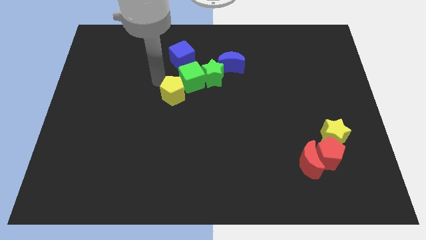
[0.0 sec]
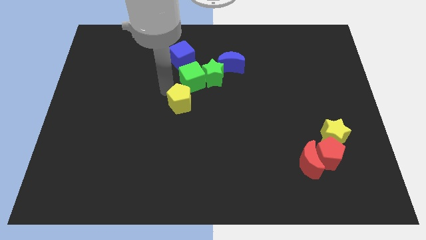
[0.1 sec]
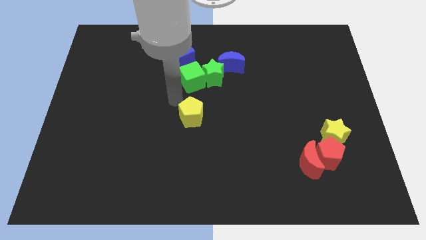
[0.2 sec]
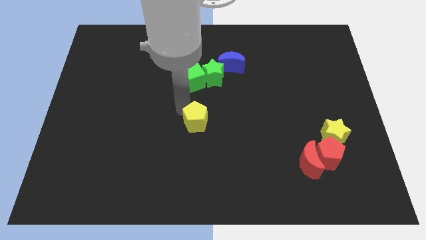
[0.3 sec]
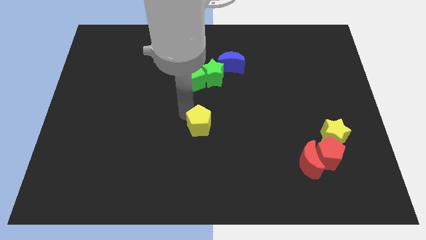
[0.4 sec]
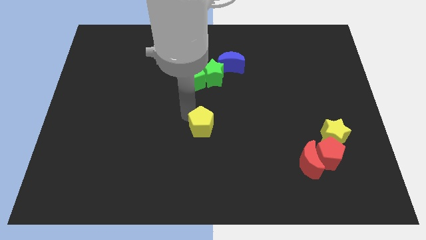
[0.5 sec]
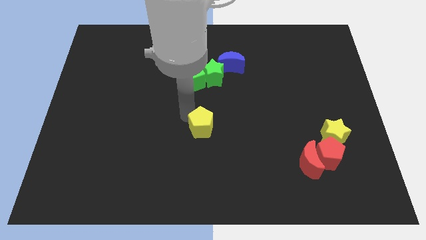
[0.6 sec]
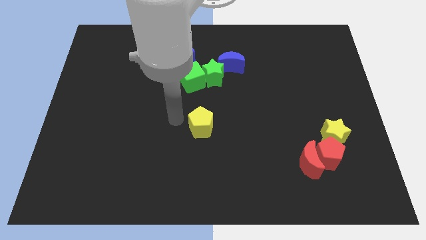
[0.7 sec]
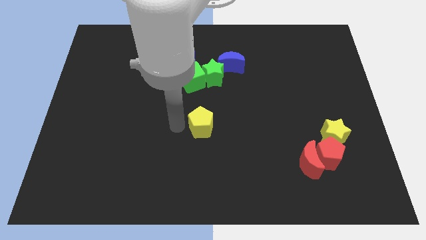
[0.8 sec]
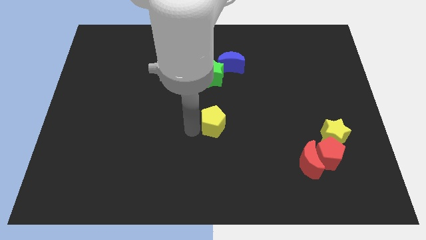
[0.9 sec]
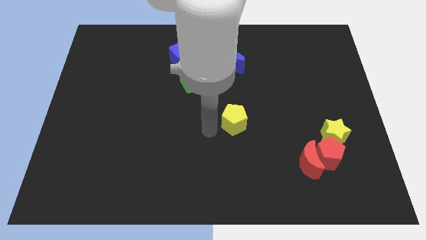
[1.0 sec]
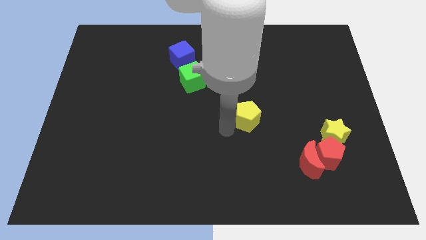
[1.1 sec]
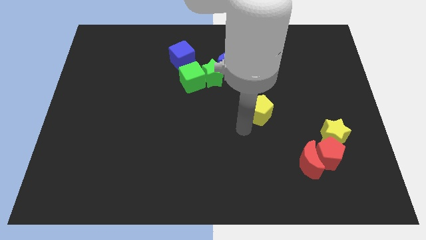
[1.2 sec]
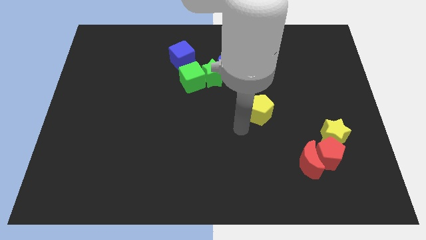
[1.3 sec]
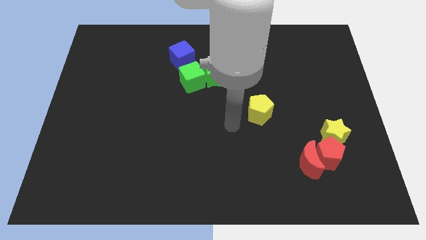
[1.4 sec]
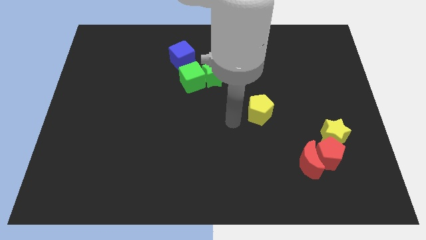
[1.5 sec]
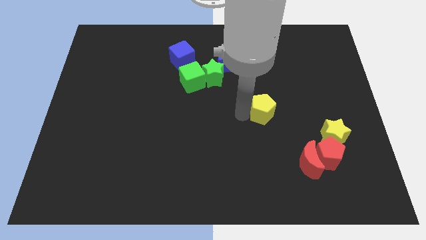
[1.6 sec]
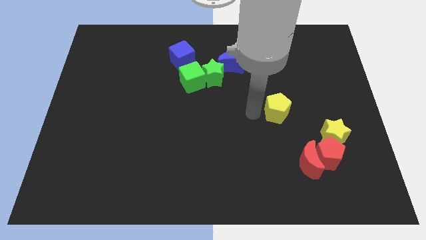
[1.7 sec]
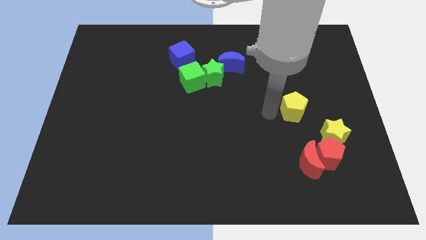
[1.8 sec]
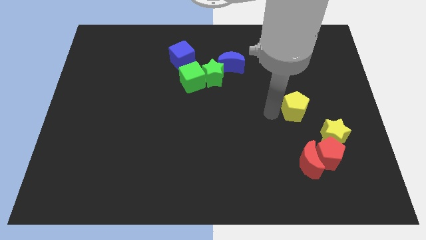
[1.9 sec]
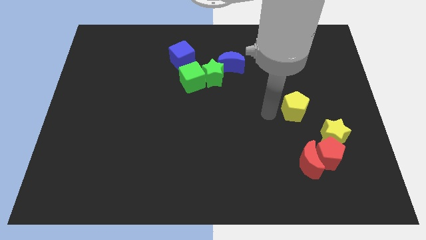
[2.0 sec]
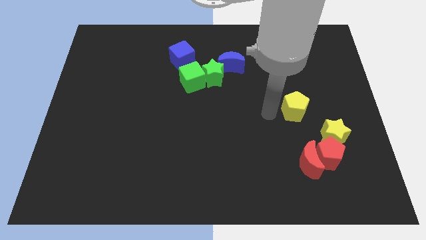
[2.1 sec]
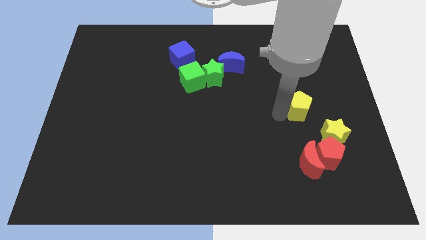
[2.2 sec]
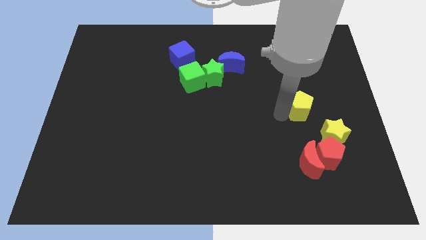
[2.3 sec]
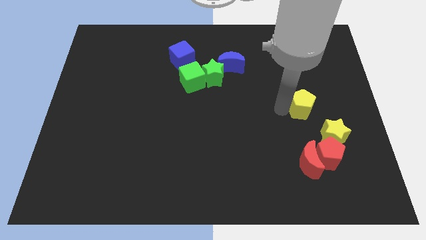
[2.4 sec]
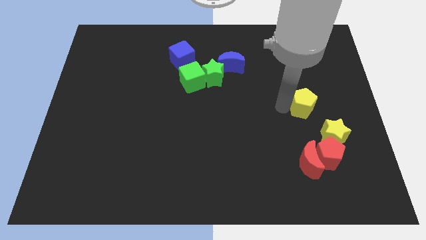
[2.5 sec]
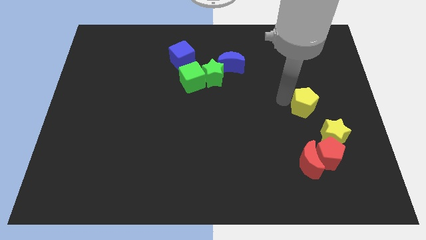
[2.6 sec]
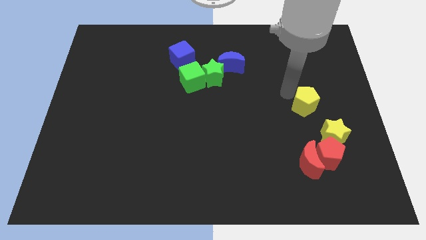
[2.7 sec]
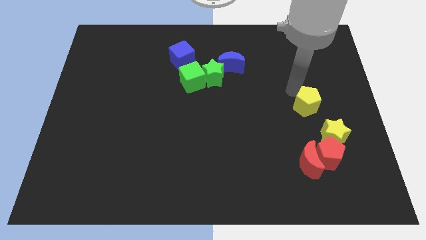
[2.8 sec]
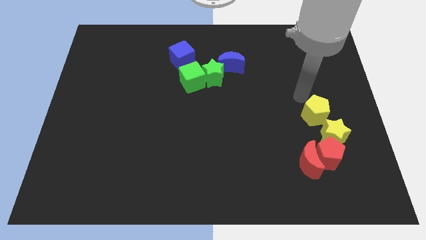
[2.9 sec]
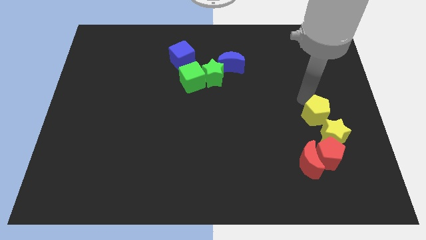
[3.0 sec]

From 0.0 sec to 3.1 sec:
place the yellow pentagon above the red pentagon

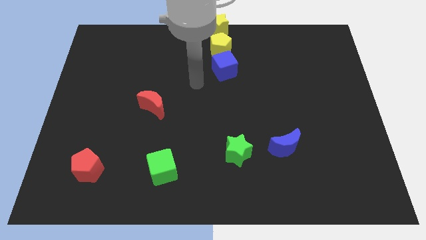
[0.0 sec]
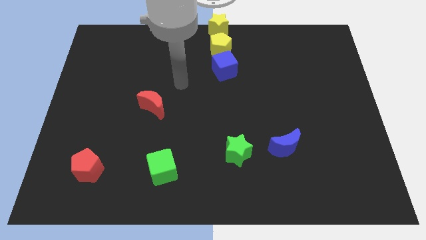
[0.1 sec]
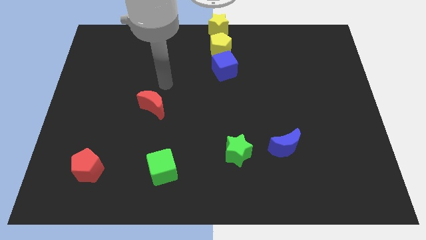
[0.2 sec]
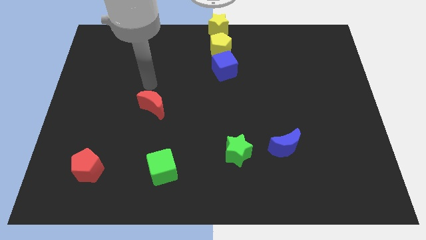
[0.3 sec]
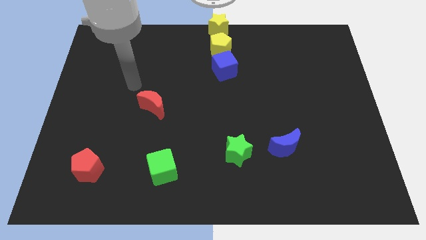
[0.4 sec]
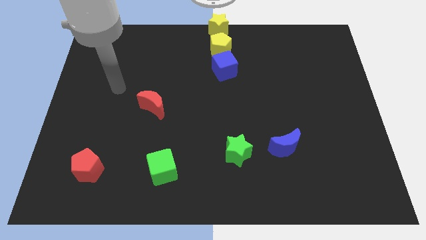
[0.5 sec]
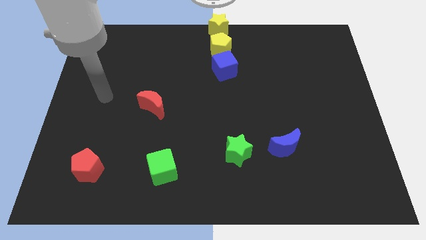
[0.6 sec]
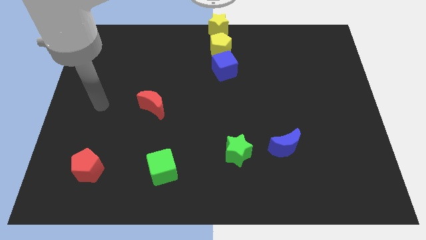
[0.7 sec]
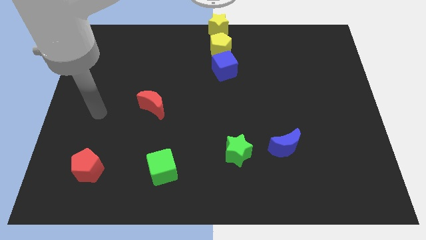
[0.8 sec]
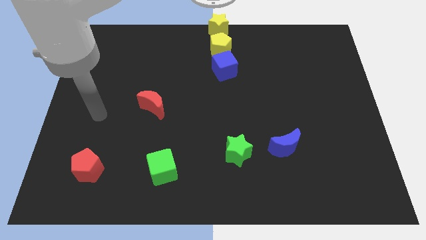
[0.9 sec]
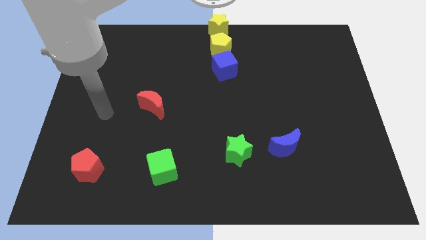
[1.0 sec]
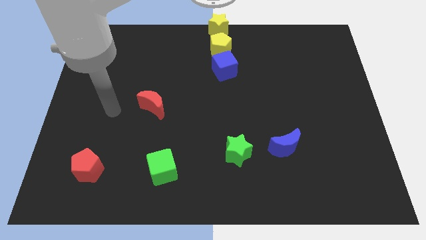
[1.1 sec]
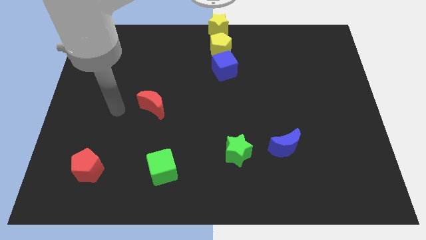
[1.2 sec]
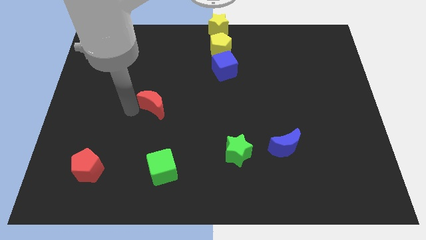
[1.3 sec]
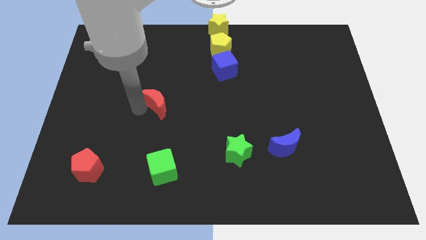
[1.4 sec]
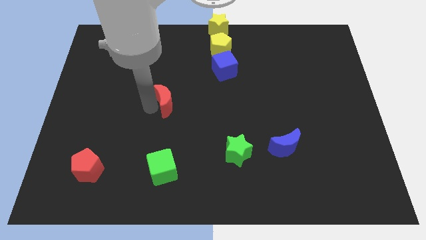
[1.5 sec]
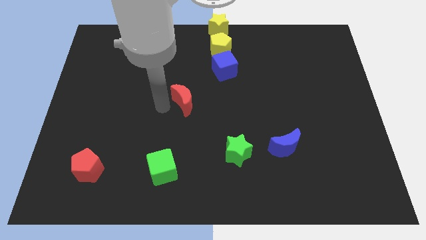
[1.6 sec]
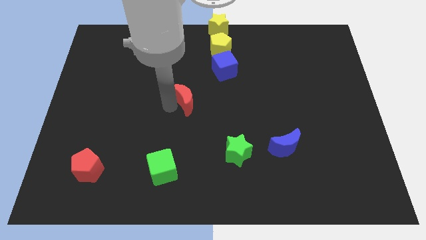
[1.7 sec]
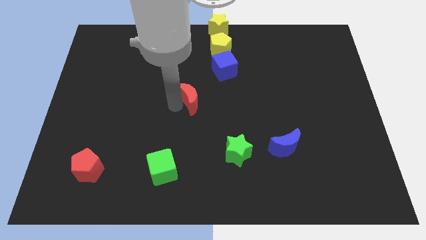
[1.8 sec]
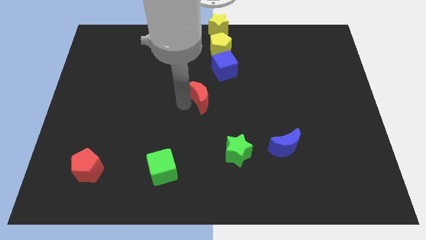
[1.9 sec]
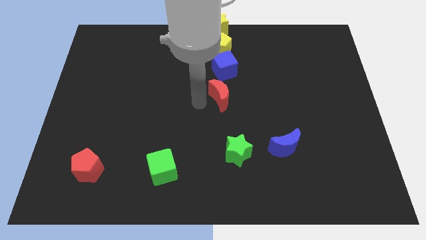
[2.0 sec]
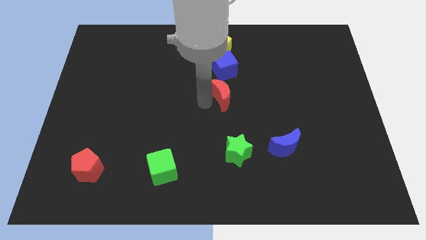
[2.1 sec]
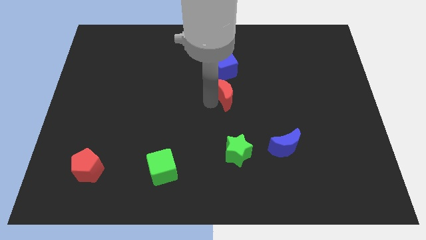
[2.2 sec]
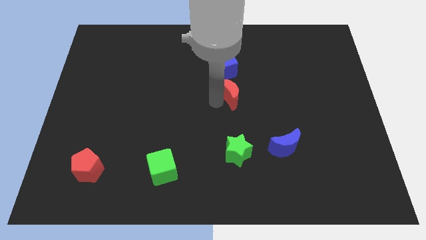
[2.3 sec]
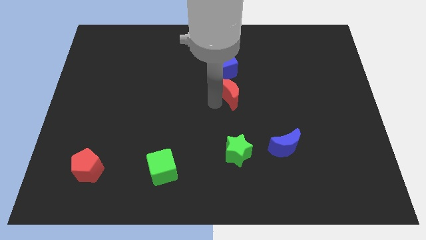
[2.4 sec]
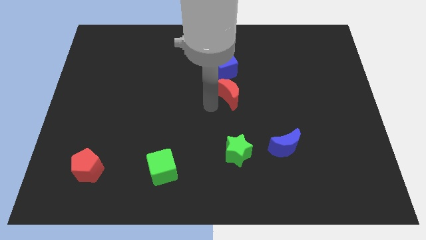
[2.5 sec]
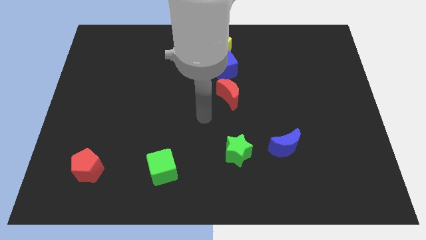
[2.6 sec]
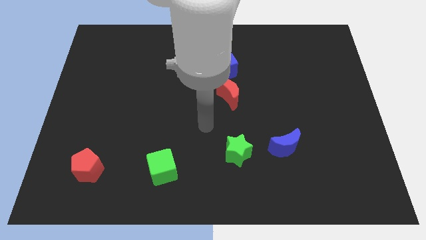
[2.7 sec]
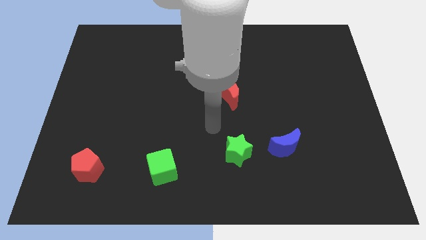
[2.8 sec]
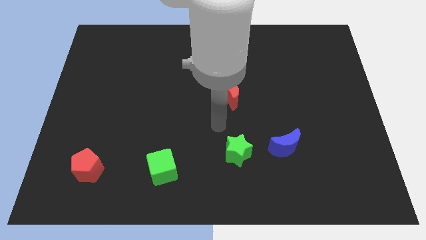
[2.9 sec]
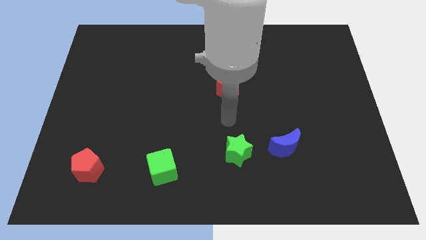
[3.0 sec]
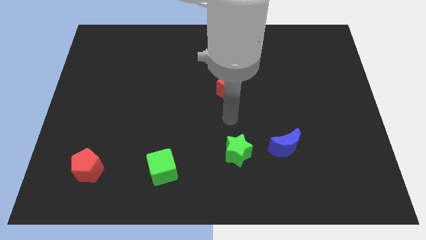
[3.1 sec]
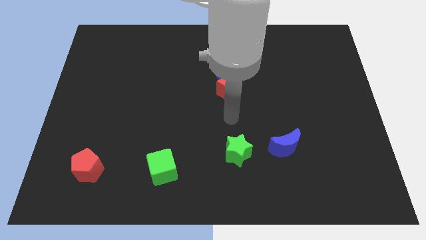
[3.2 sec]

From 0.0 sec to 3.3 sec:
place the red crescent vertically above the green star

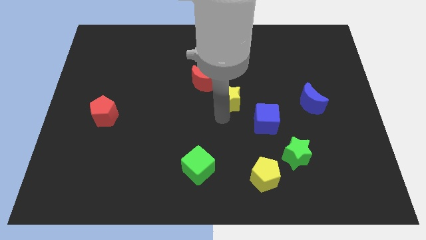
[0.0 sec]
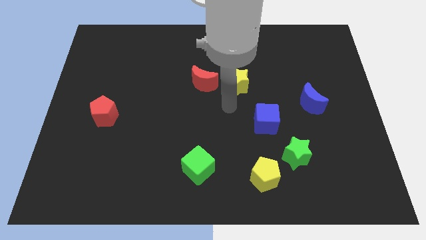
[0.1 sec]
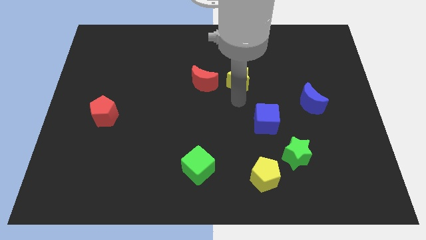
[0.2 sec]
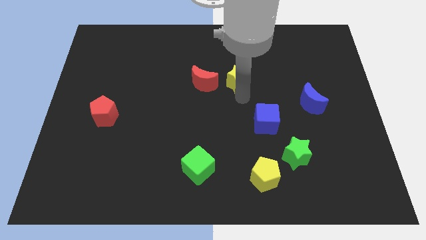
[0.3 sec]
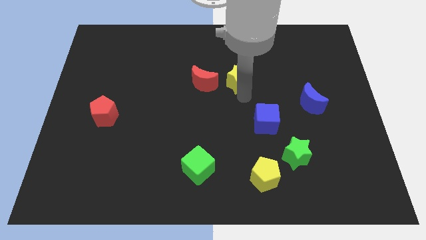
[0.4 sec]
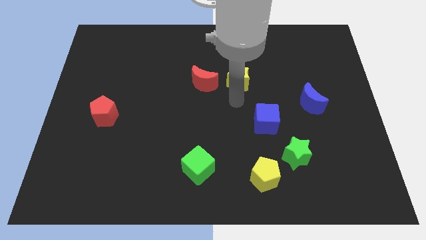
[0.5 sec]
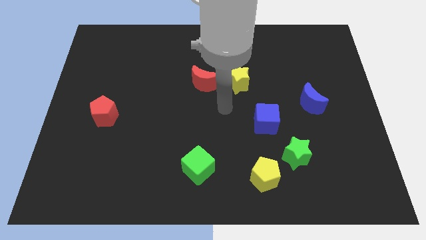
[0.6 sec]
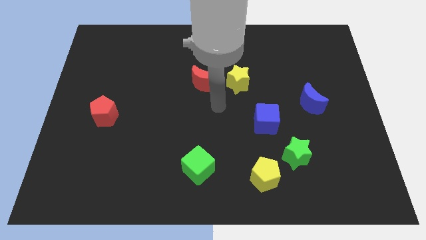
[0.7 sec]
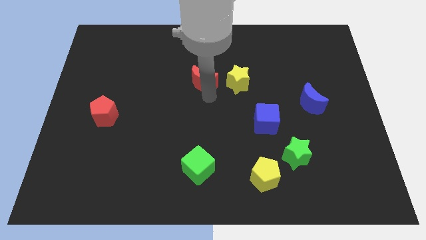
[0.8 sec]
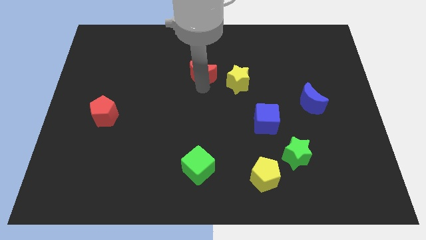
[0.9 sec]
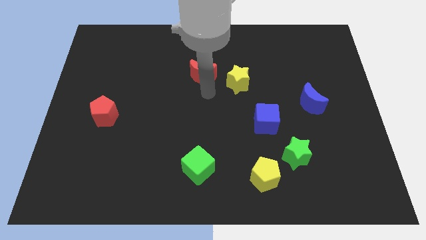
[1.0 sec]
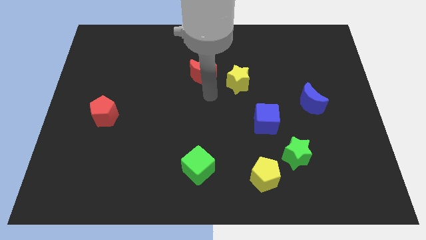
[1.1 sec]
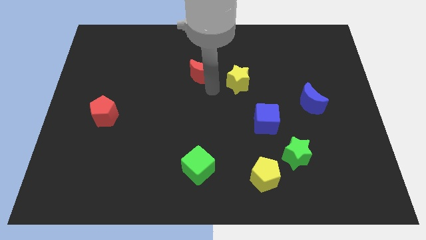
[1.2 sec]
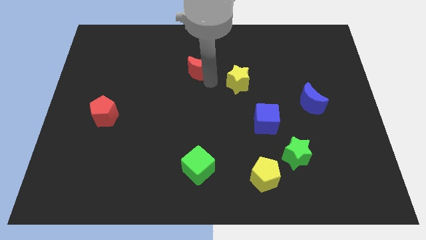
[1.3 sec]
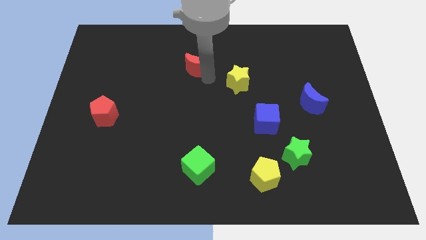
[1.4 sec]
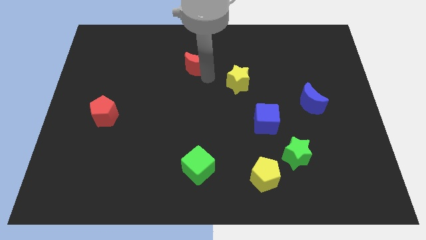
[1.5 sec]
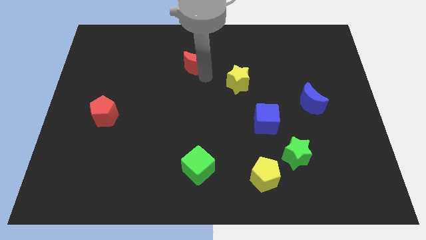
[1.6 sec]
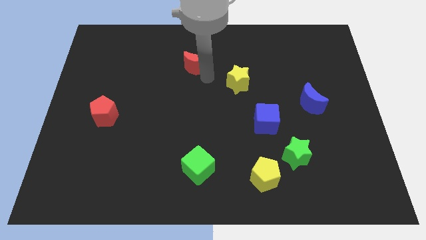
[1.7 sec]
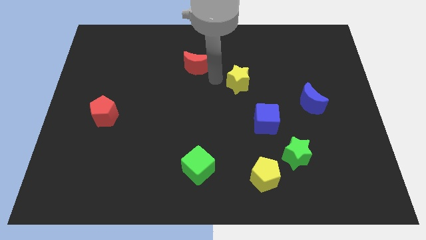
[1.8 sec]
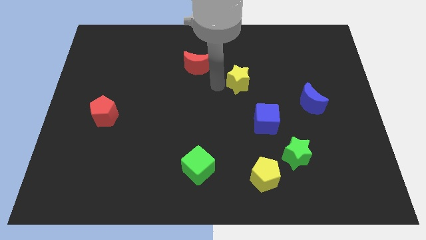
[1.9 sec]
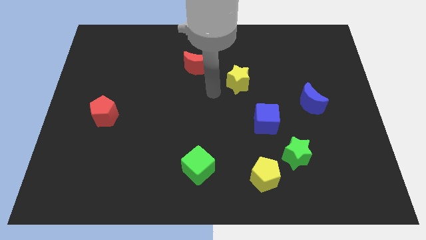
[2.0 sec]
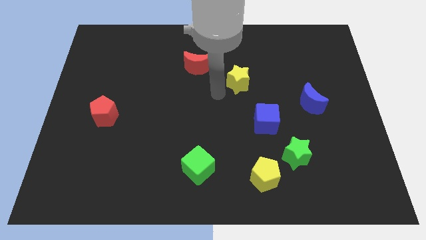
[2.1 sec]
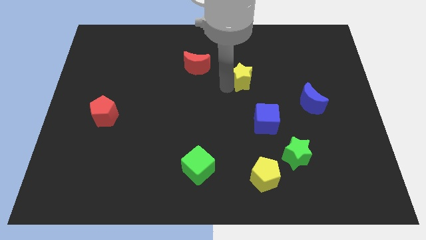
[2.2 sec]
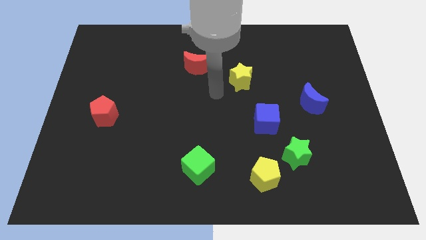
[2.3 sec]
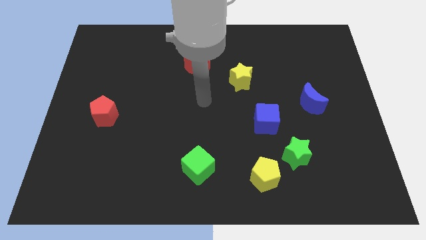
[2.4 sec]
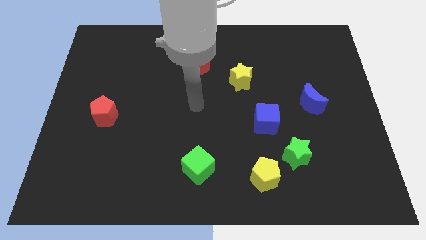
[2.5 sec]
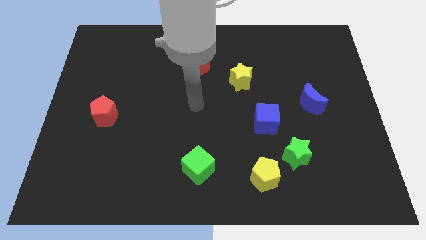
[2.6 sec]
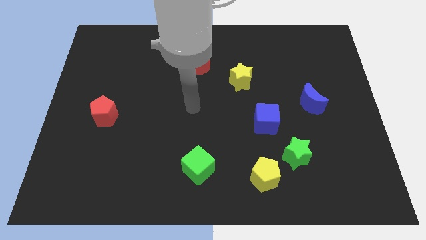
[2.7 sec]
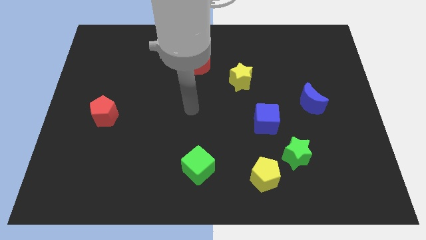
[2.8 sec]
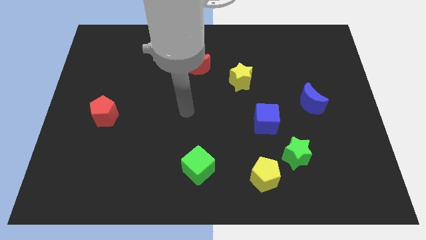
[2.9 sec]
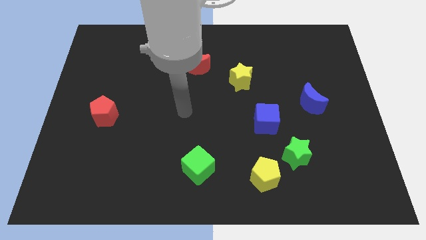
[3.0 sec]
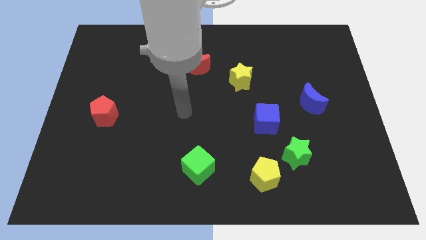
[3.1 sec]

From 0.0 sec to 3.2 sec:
place the yellow star and red moon diagonally
